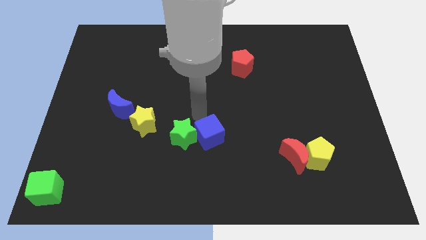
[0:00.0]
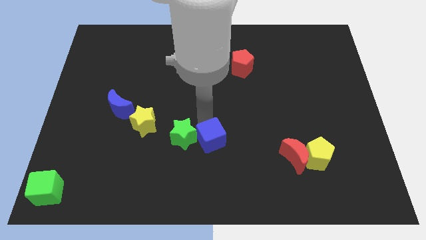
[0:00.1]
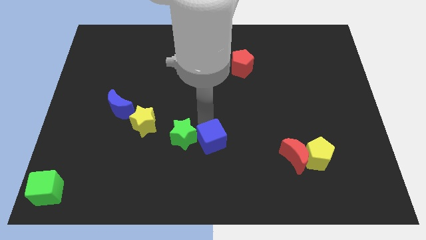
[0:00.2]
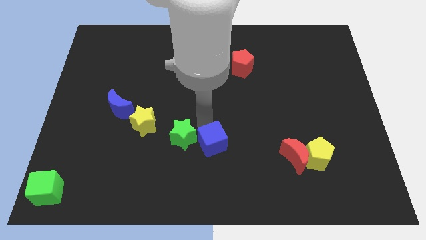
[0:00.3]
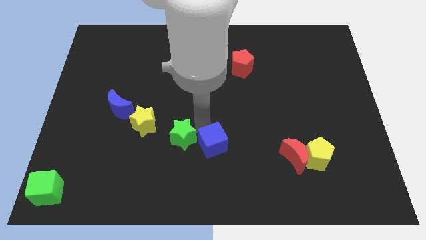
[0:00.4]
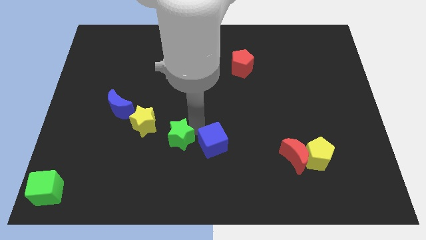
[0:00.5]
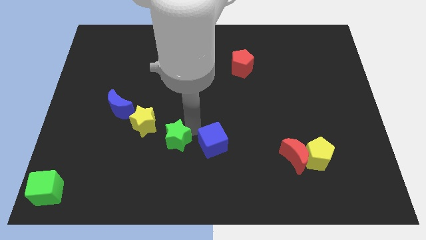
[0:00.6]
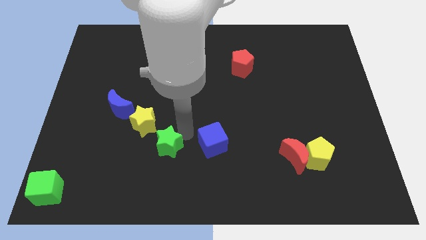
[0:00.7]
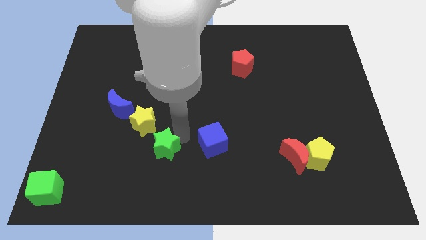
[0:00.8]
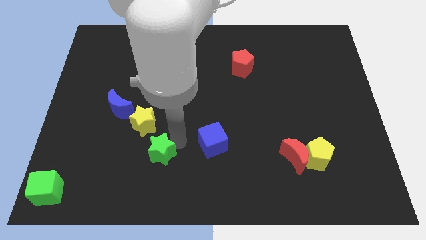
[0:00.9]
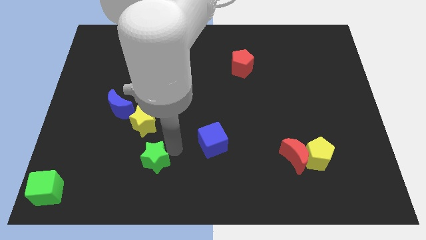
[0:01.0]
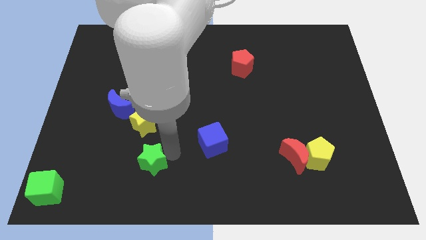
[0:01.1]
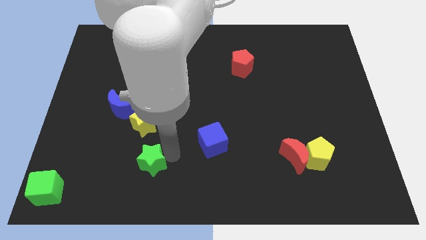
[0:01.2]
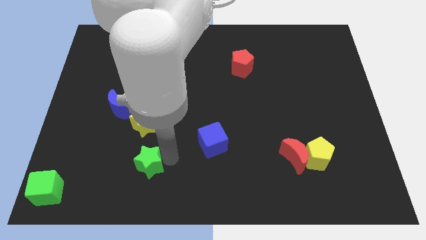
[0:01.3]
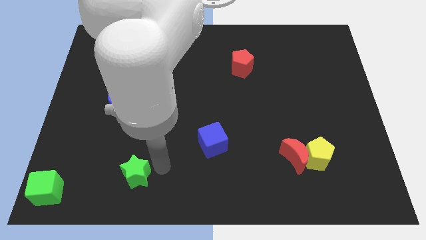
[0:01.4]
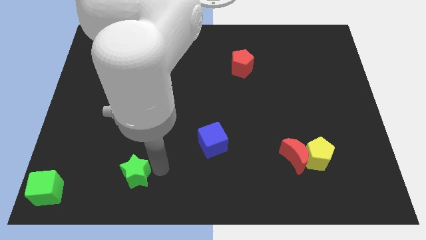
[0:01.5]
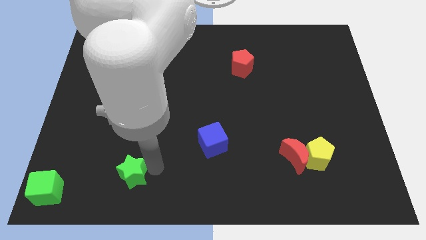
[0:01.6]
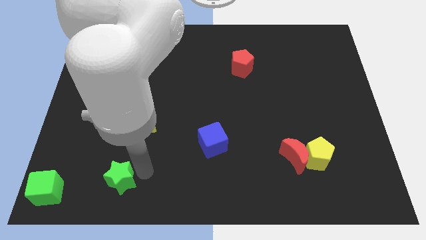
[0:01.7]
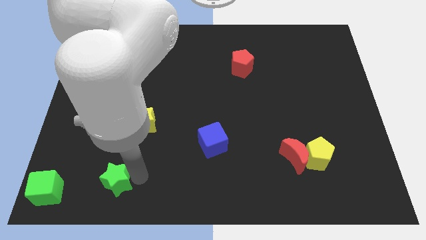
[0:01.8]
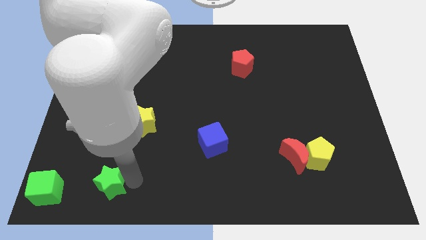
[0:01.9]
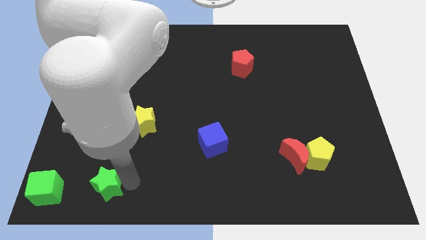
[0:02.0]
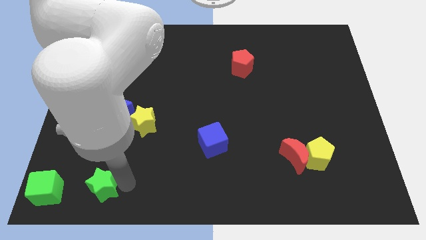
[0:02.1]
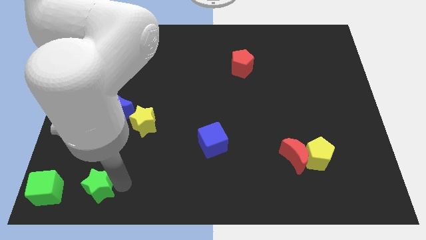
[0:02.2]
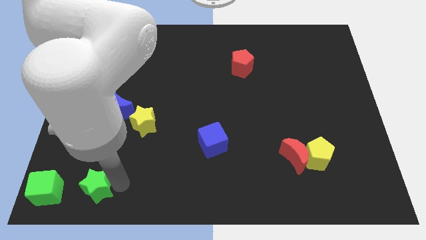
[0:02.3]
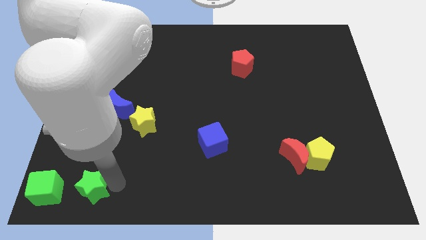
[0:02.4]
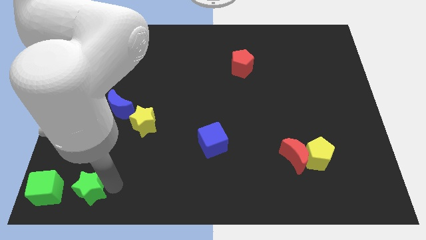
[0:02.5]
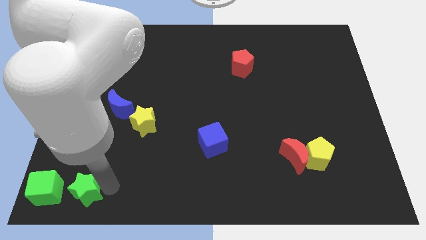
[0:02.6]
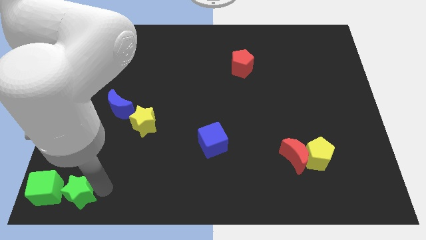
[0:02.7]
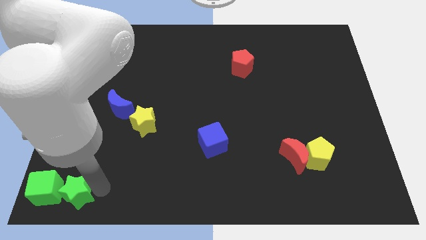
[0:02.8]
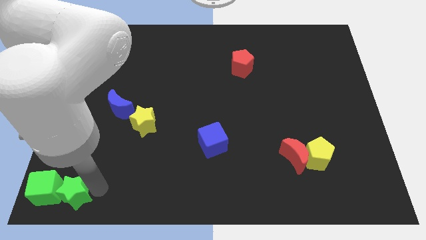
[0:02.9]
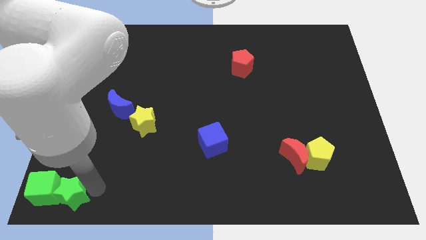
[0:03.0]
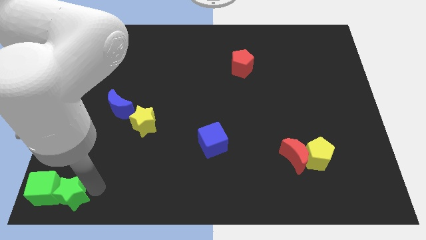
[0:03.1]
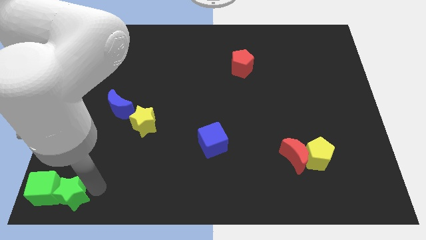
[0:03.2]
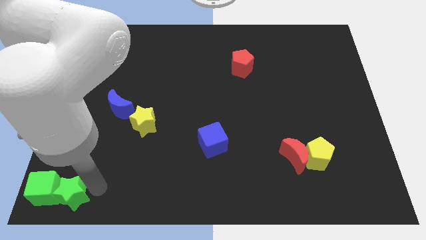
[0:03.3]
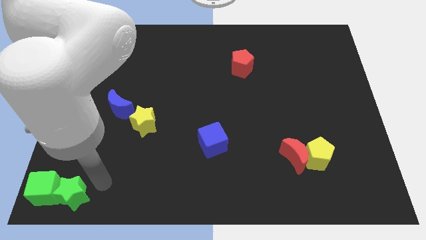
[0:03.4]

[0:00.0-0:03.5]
push the green star into the green cube

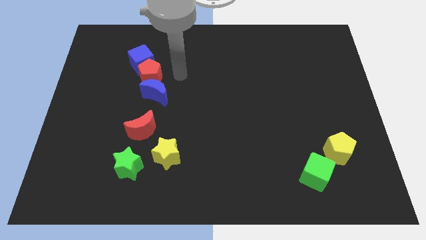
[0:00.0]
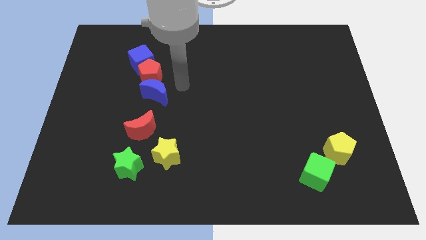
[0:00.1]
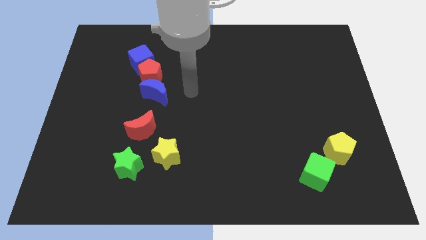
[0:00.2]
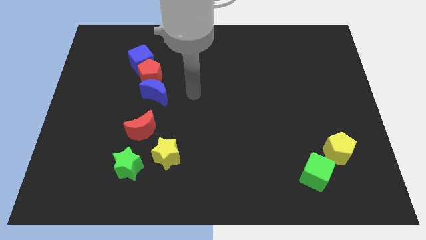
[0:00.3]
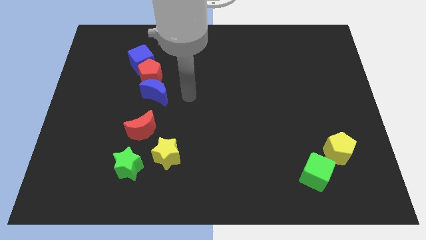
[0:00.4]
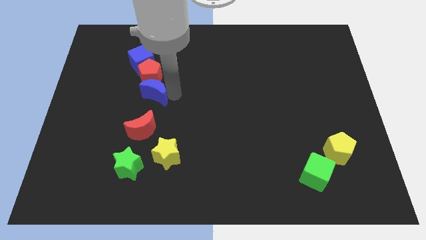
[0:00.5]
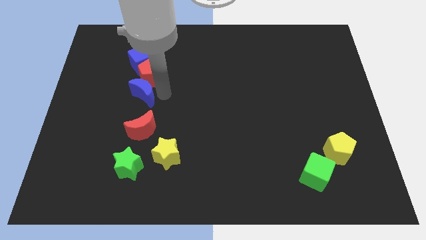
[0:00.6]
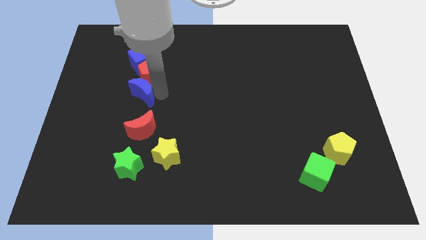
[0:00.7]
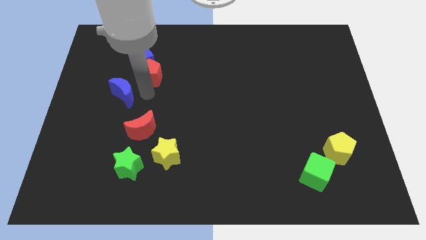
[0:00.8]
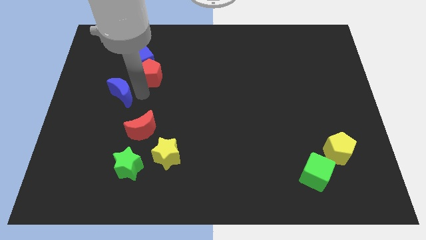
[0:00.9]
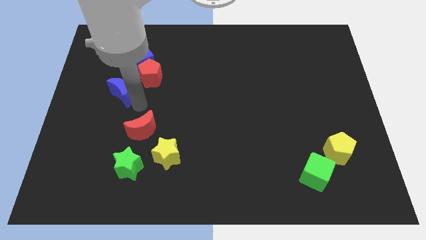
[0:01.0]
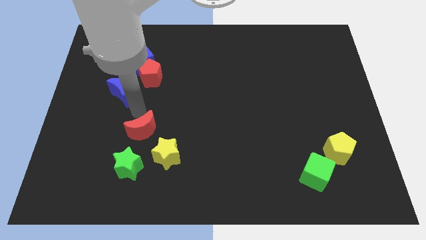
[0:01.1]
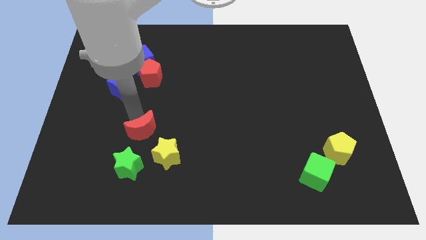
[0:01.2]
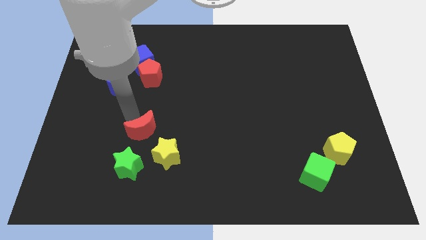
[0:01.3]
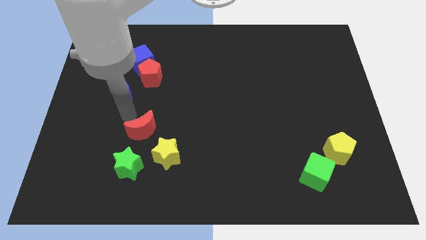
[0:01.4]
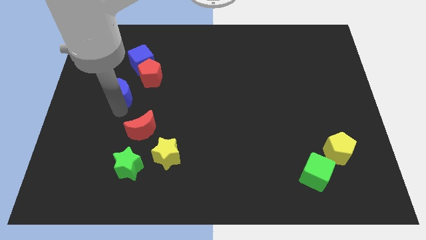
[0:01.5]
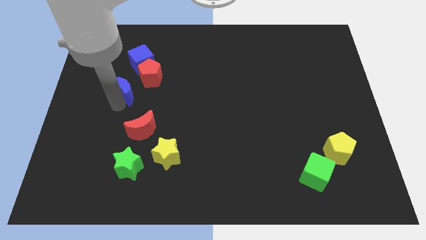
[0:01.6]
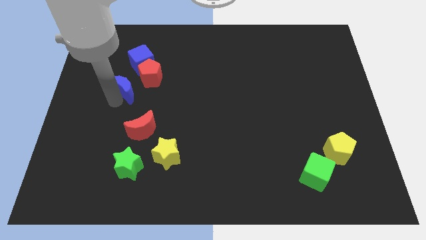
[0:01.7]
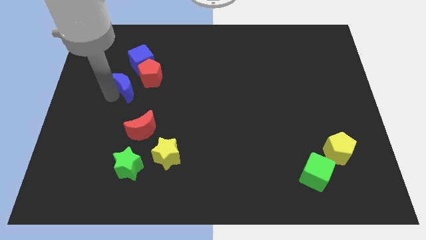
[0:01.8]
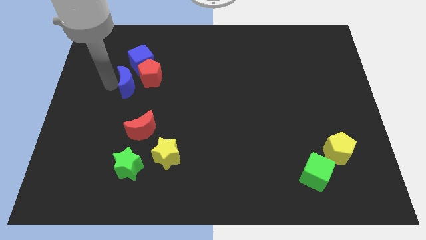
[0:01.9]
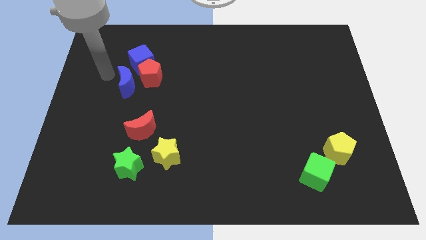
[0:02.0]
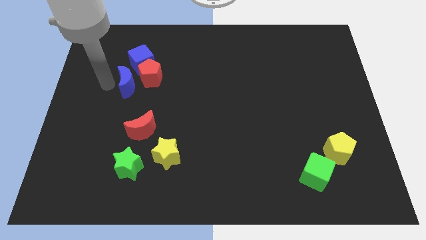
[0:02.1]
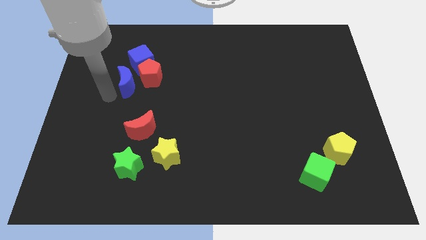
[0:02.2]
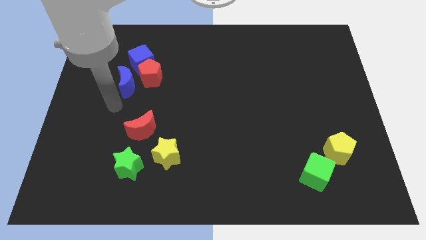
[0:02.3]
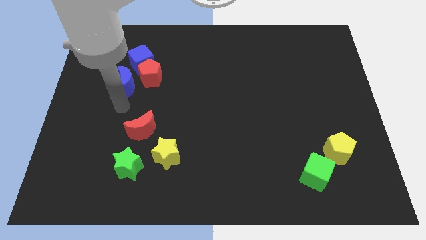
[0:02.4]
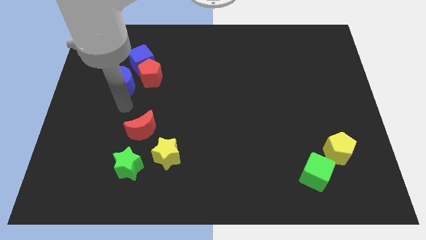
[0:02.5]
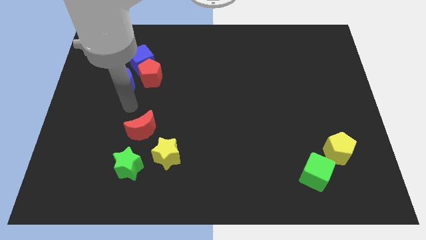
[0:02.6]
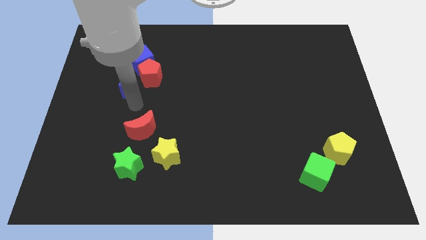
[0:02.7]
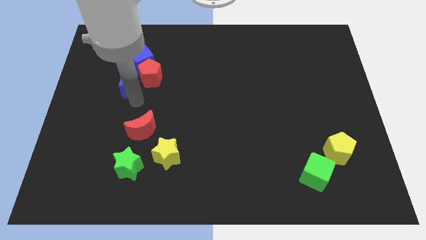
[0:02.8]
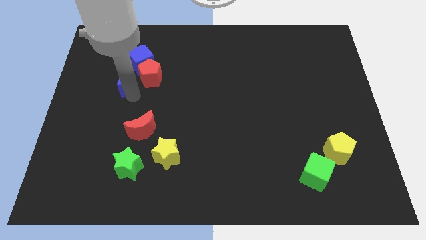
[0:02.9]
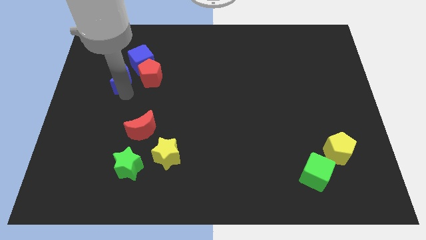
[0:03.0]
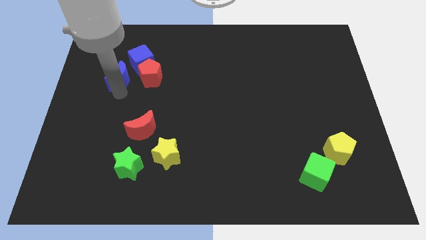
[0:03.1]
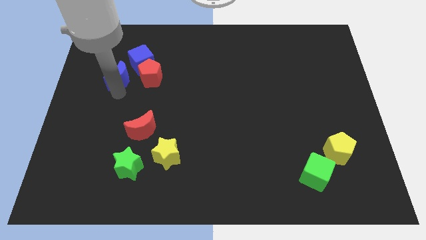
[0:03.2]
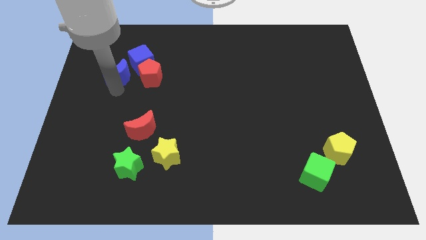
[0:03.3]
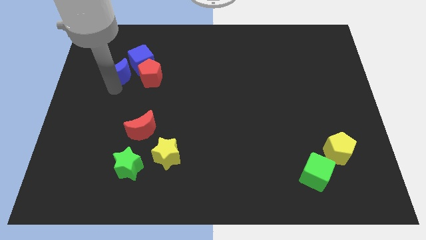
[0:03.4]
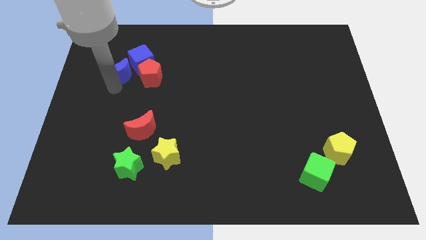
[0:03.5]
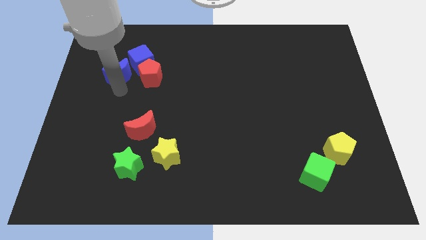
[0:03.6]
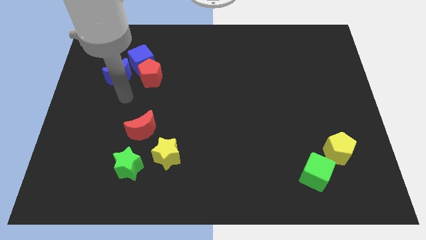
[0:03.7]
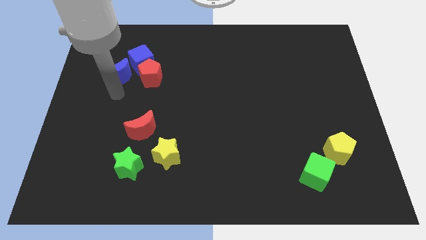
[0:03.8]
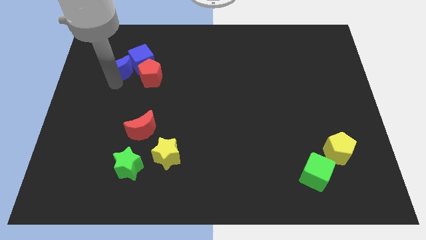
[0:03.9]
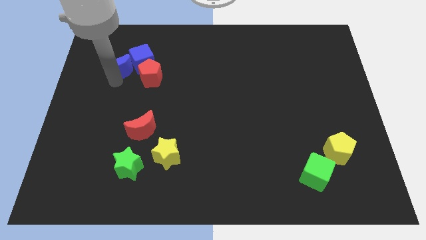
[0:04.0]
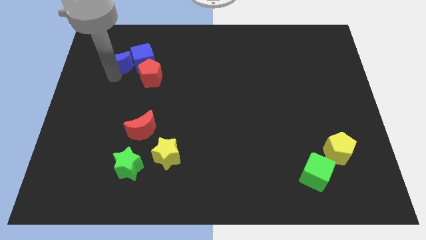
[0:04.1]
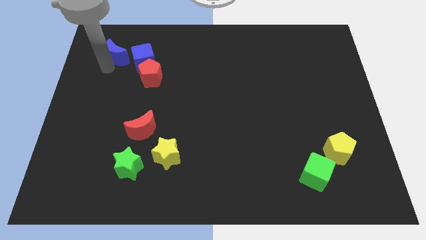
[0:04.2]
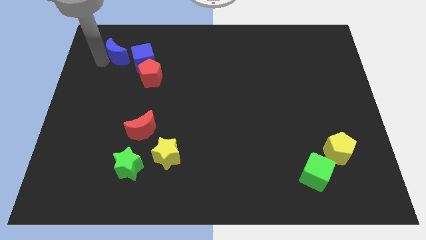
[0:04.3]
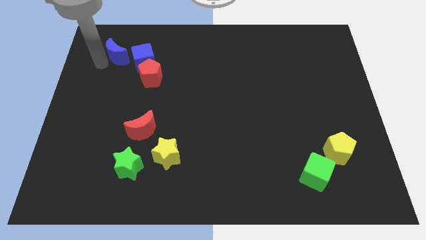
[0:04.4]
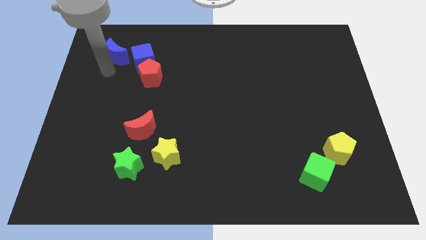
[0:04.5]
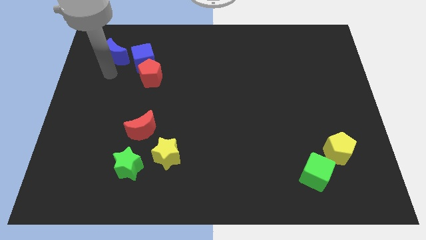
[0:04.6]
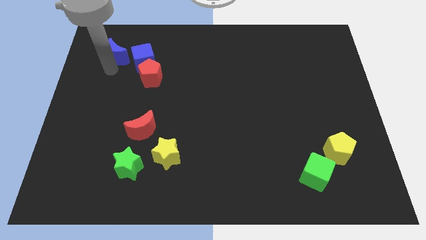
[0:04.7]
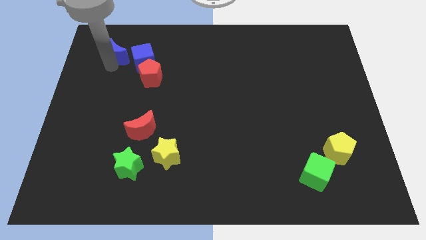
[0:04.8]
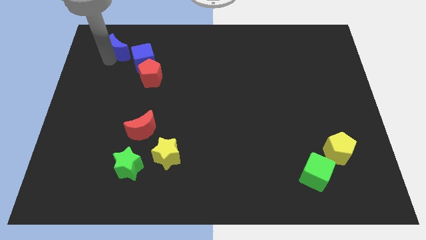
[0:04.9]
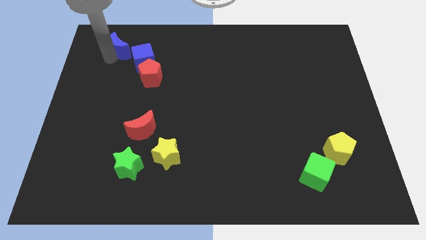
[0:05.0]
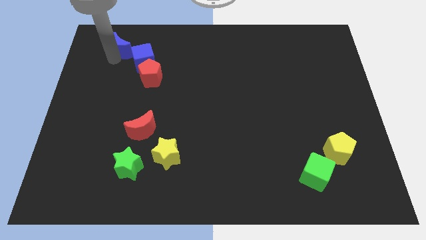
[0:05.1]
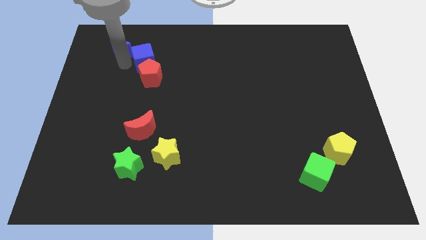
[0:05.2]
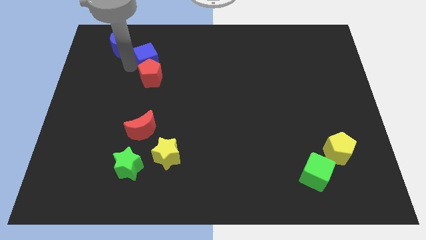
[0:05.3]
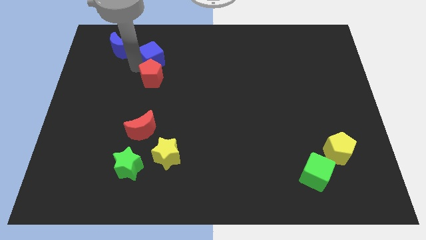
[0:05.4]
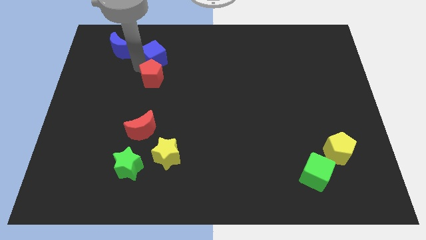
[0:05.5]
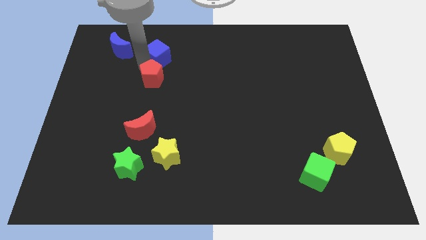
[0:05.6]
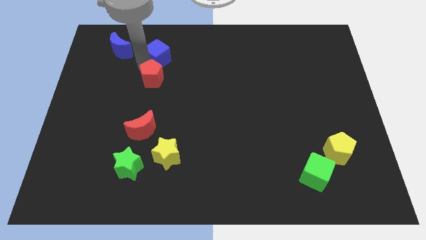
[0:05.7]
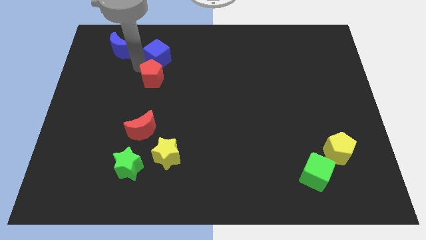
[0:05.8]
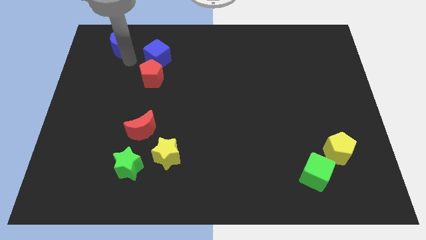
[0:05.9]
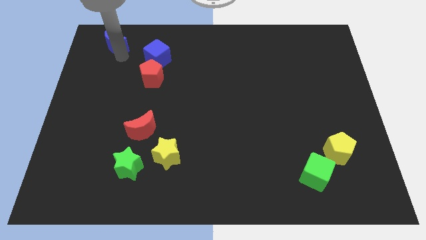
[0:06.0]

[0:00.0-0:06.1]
slide the blue moon diagonally to the blue cube
